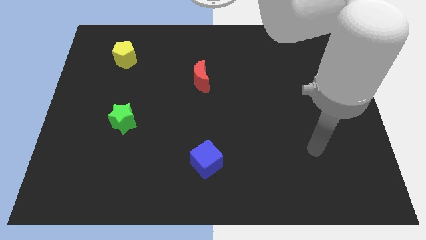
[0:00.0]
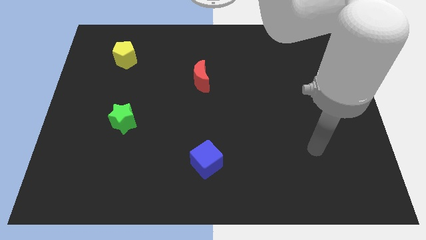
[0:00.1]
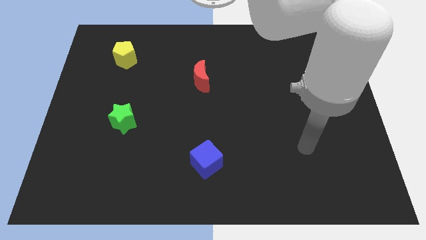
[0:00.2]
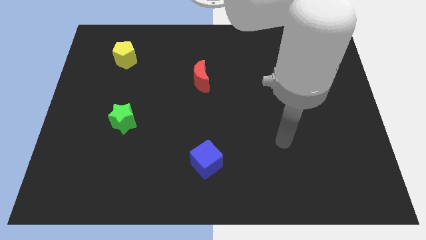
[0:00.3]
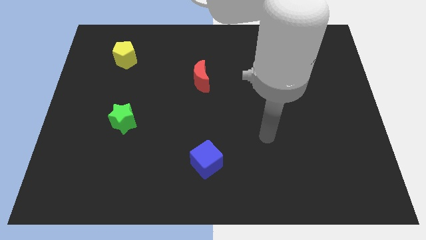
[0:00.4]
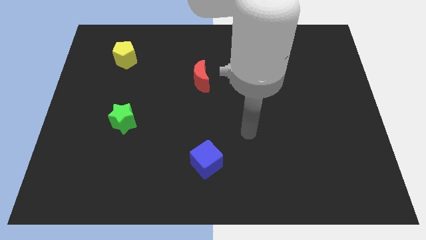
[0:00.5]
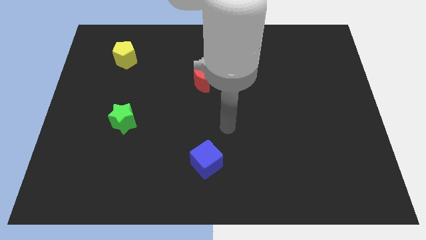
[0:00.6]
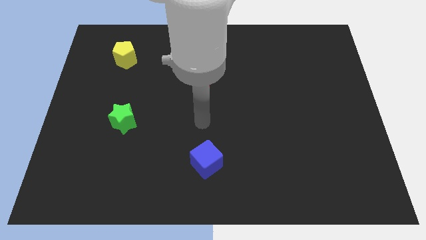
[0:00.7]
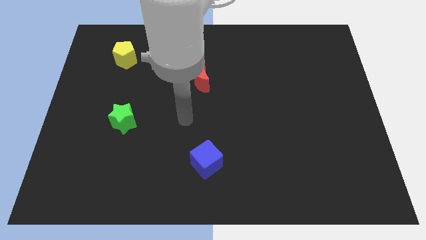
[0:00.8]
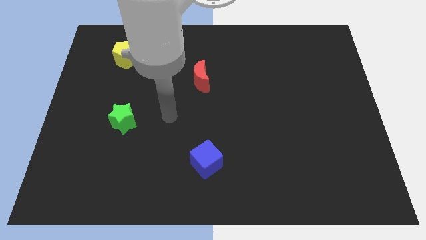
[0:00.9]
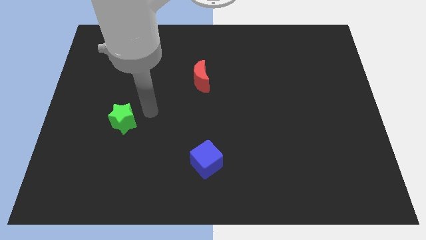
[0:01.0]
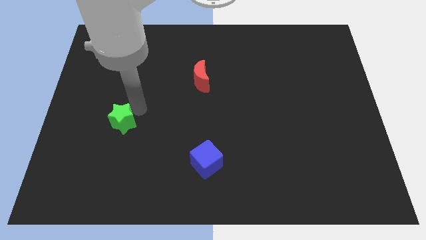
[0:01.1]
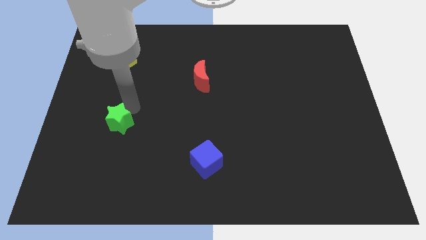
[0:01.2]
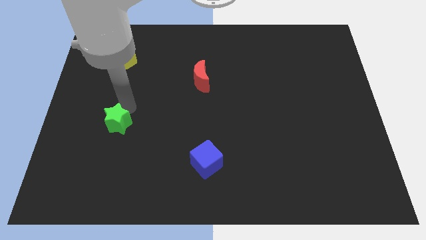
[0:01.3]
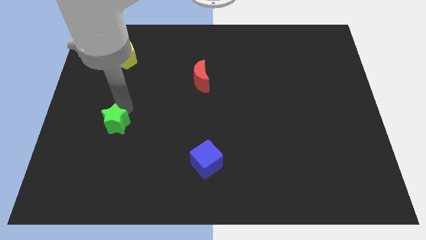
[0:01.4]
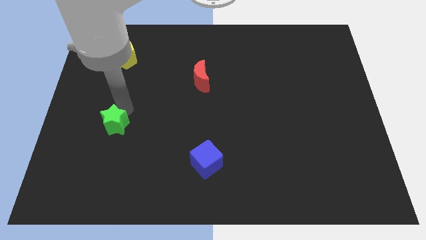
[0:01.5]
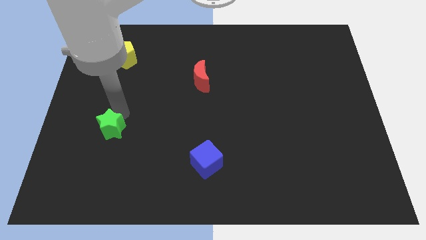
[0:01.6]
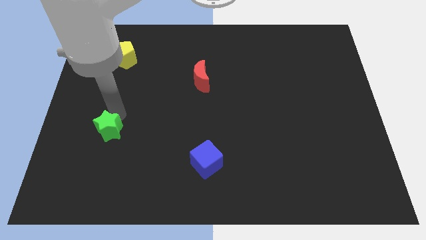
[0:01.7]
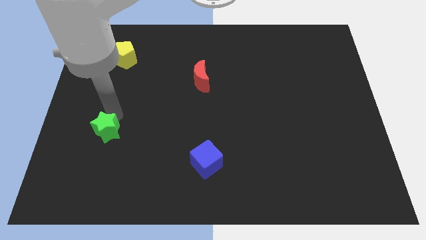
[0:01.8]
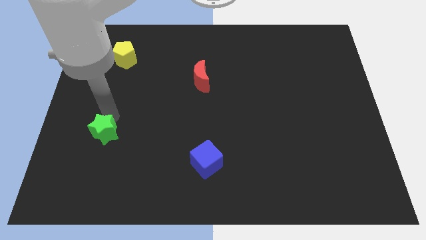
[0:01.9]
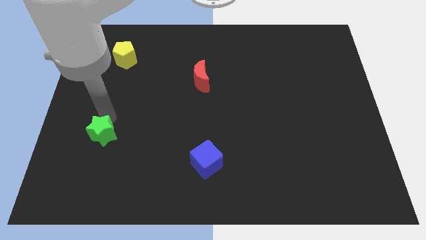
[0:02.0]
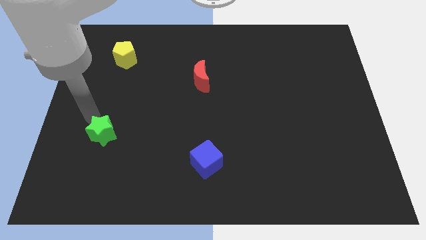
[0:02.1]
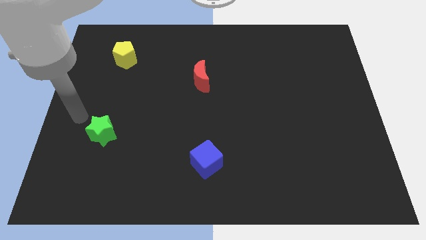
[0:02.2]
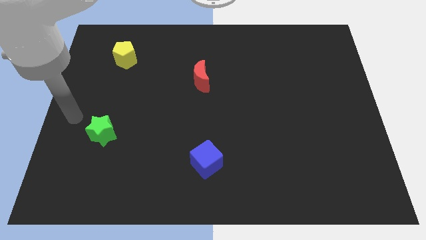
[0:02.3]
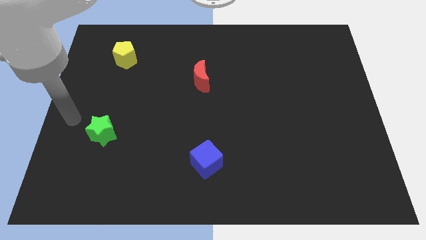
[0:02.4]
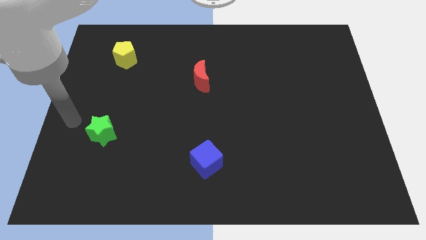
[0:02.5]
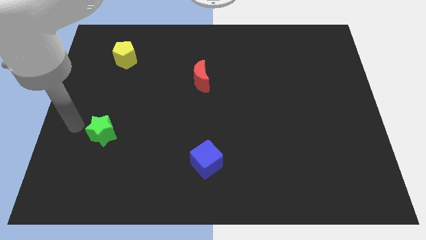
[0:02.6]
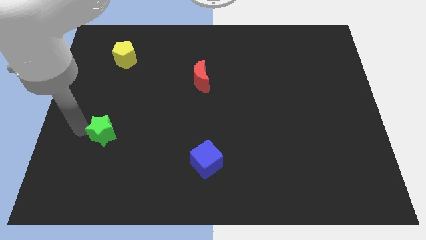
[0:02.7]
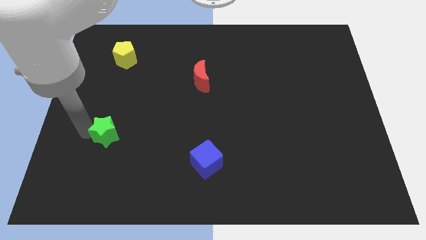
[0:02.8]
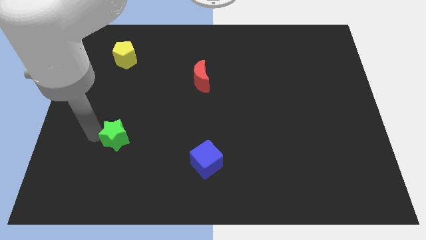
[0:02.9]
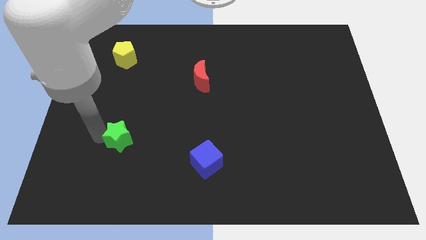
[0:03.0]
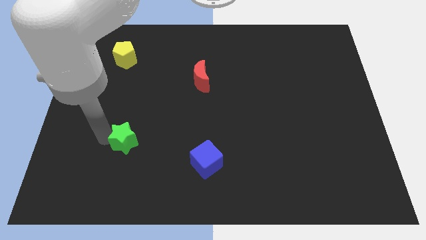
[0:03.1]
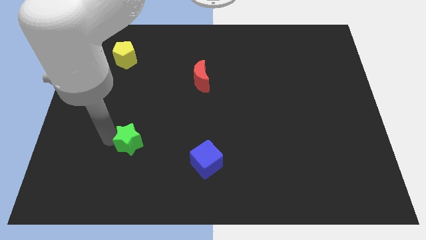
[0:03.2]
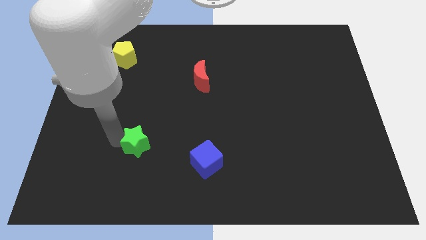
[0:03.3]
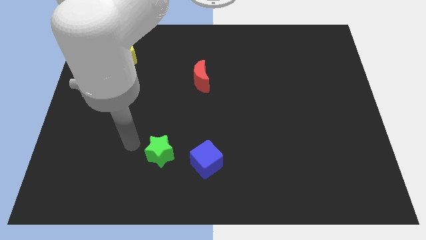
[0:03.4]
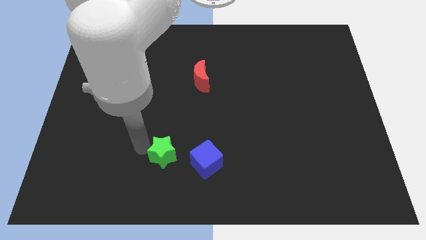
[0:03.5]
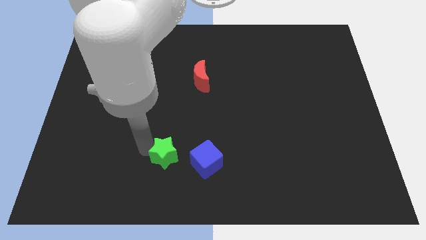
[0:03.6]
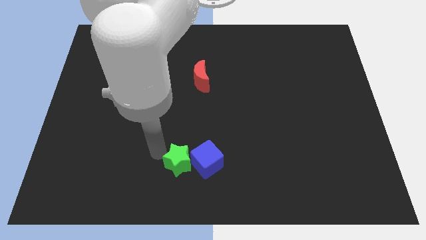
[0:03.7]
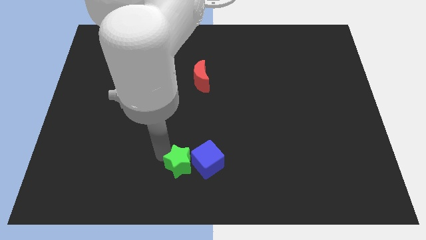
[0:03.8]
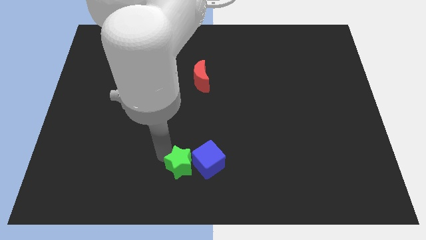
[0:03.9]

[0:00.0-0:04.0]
put the star to the blue cube

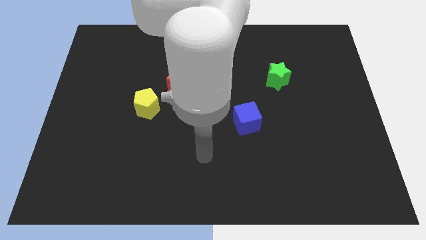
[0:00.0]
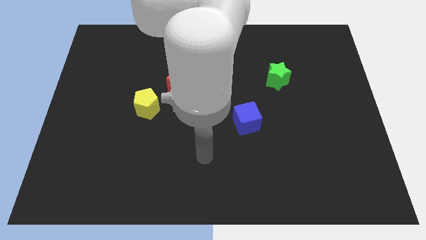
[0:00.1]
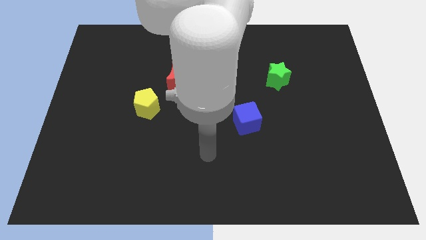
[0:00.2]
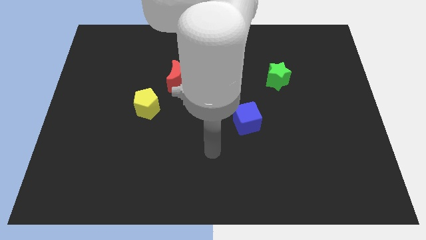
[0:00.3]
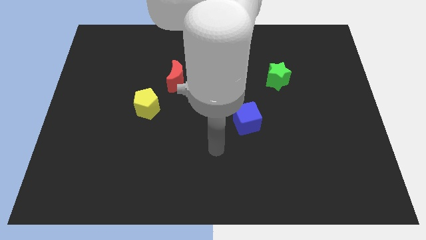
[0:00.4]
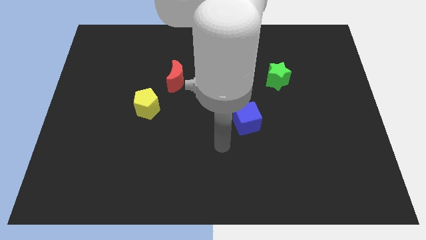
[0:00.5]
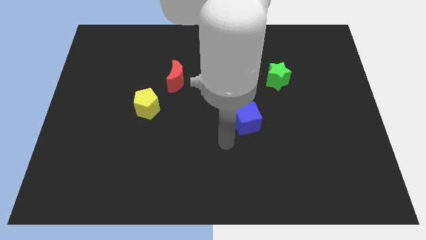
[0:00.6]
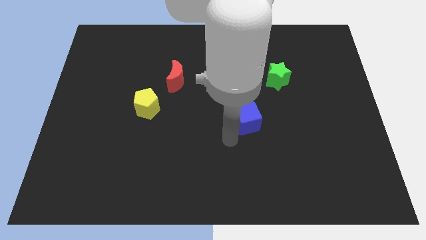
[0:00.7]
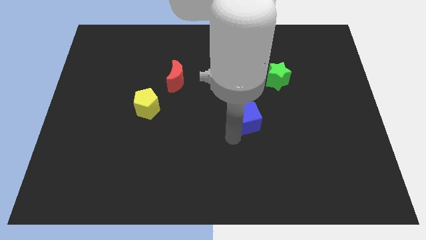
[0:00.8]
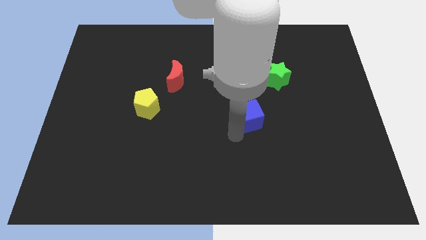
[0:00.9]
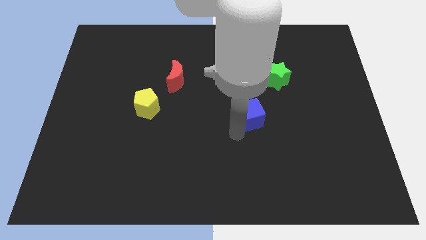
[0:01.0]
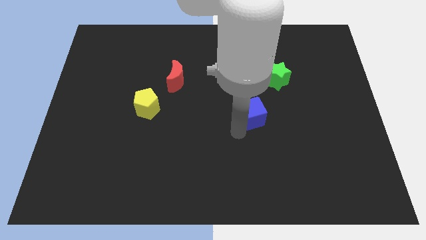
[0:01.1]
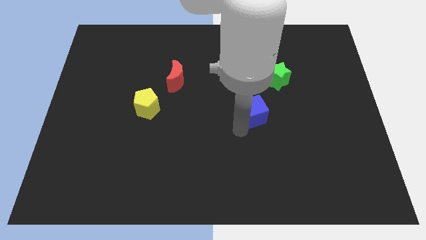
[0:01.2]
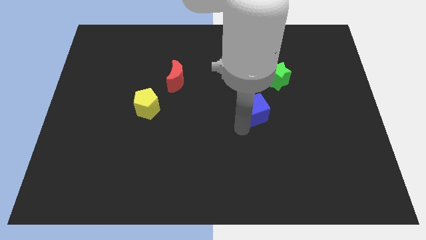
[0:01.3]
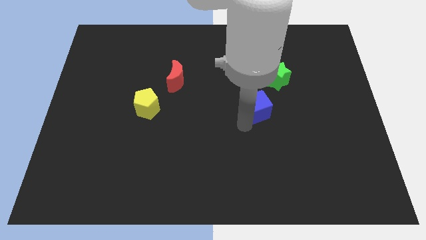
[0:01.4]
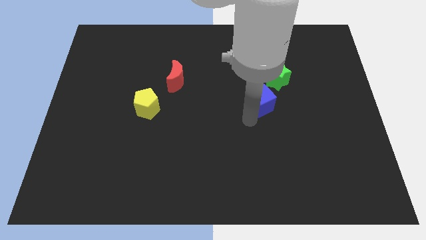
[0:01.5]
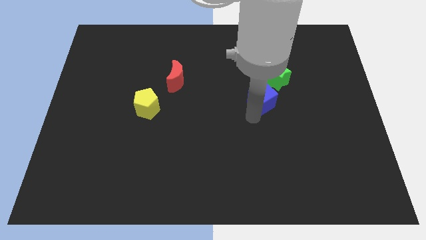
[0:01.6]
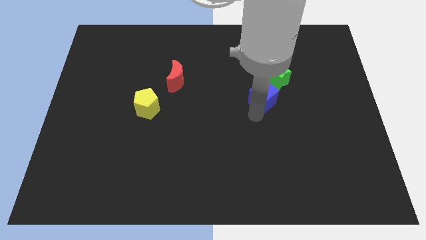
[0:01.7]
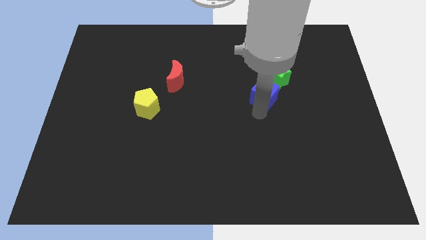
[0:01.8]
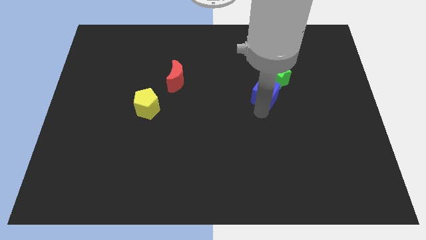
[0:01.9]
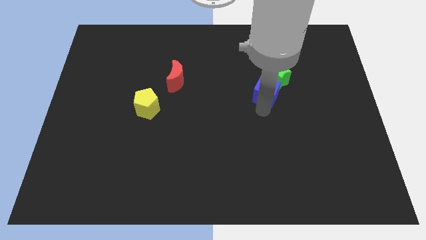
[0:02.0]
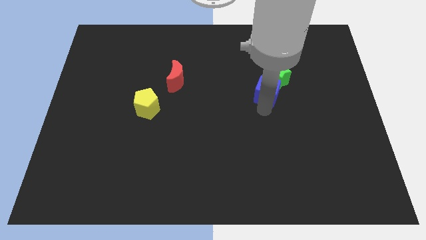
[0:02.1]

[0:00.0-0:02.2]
push the blue cube towards the green star

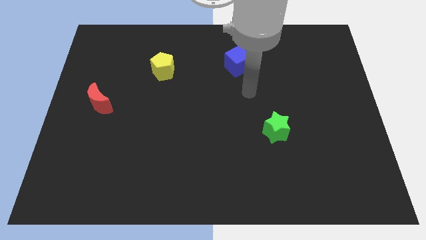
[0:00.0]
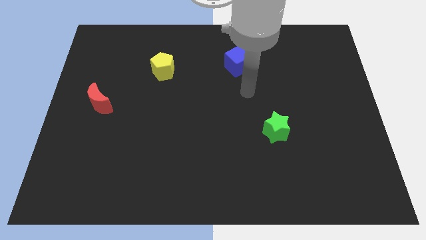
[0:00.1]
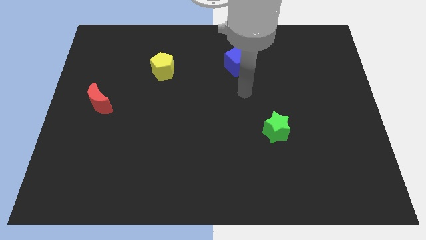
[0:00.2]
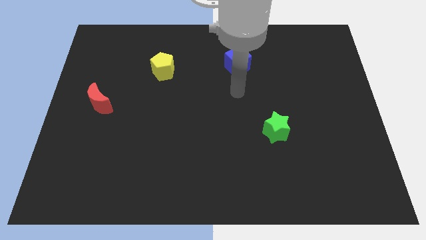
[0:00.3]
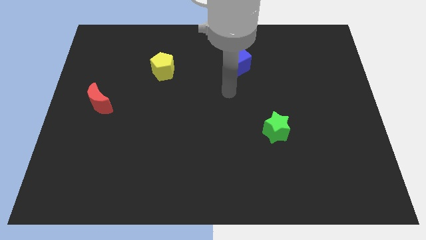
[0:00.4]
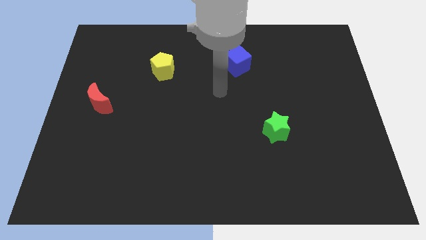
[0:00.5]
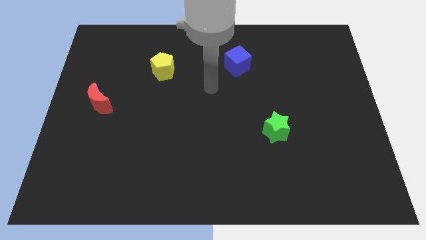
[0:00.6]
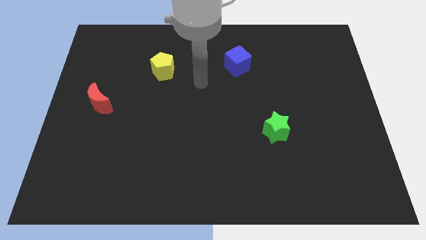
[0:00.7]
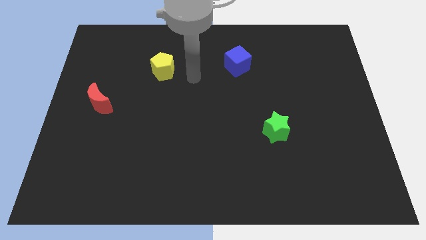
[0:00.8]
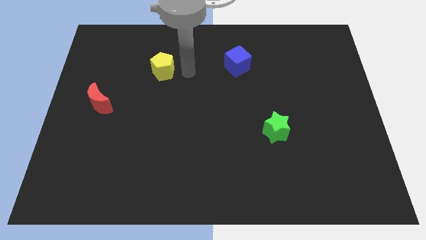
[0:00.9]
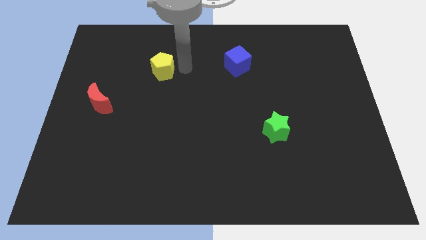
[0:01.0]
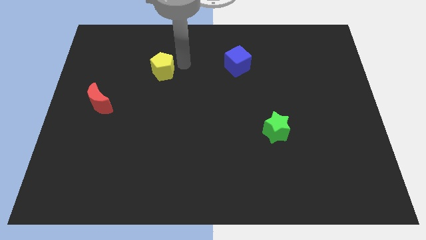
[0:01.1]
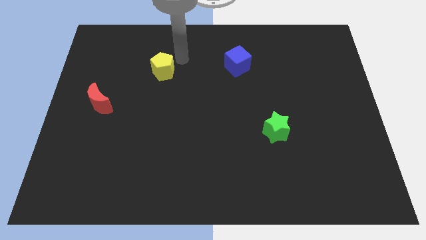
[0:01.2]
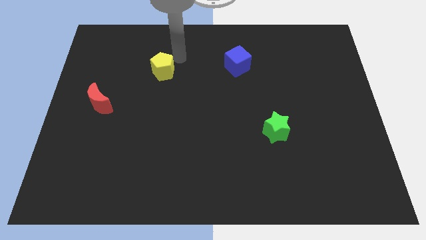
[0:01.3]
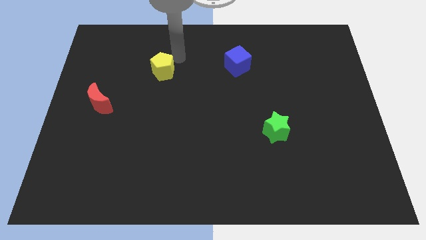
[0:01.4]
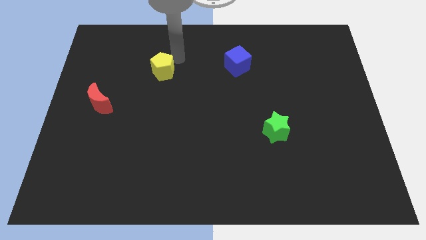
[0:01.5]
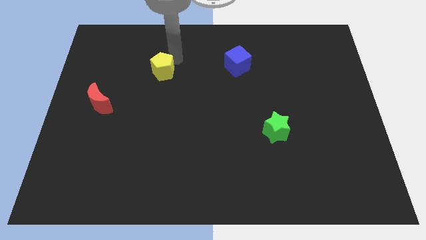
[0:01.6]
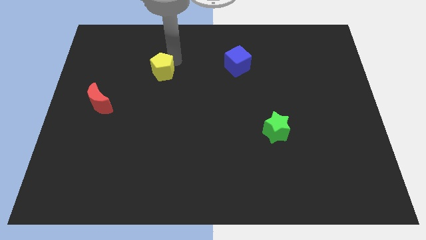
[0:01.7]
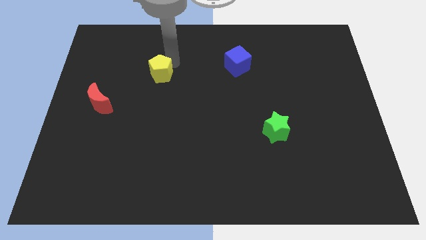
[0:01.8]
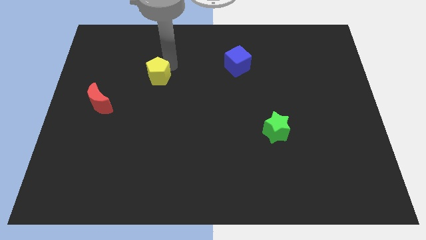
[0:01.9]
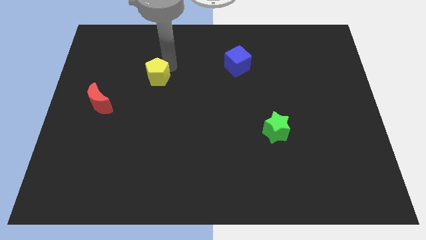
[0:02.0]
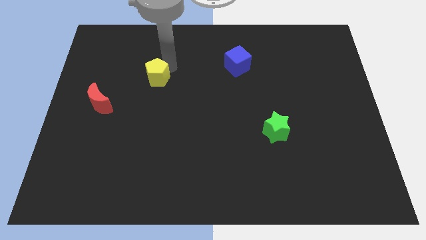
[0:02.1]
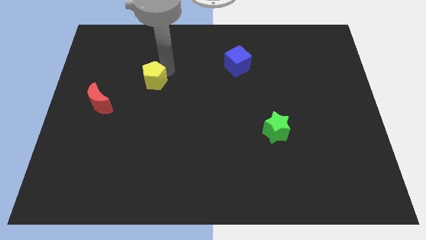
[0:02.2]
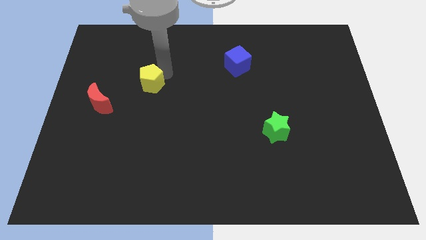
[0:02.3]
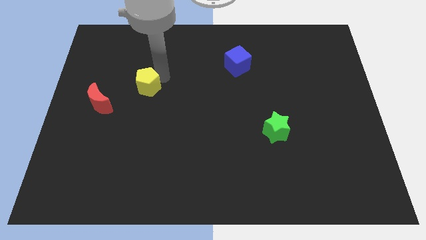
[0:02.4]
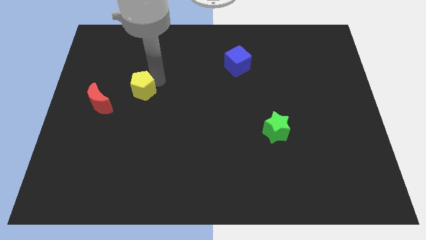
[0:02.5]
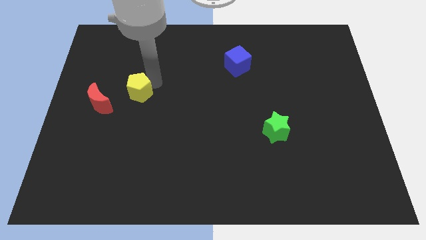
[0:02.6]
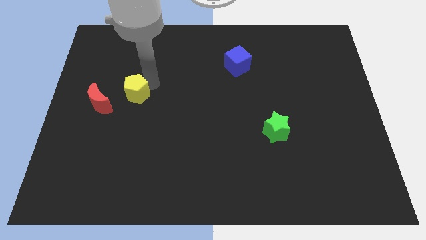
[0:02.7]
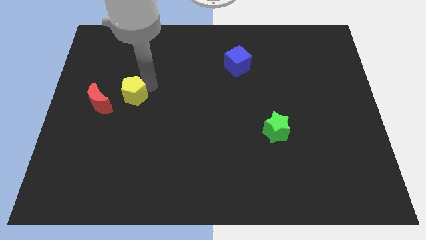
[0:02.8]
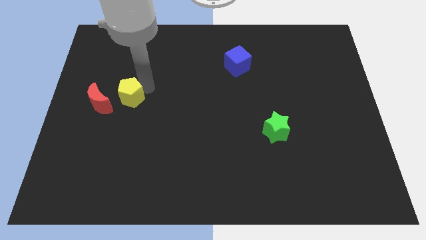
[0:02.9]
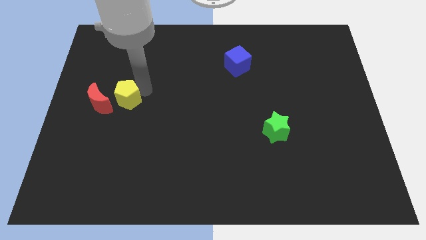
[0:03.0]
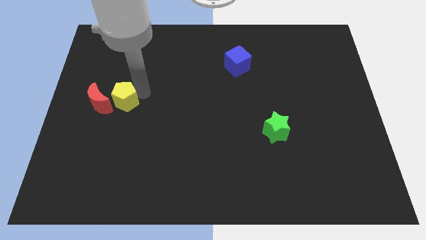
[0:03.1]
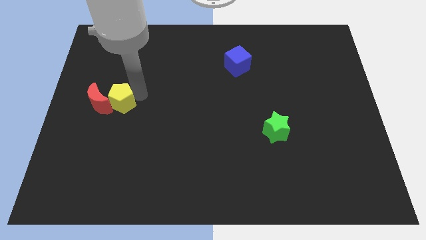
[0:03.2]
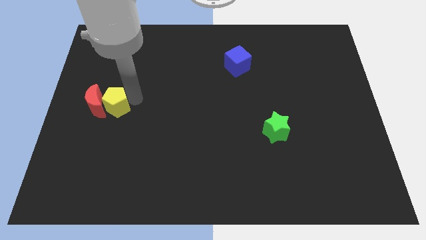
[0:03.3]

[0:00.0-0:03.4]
put the yellow block to the moon
